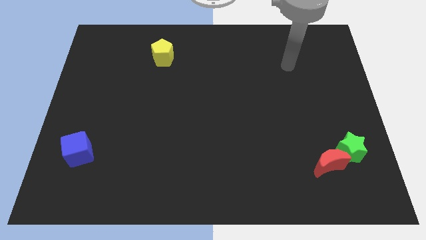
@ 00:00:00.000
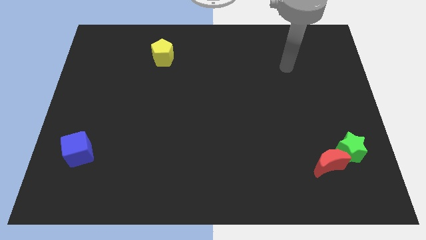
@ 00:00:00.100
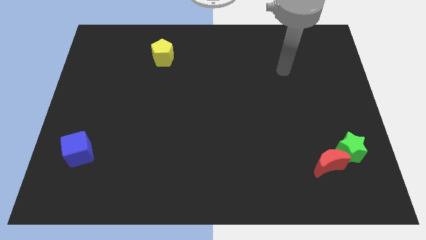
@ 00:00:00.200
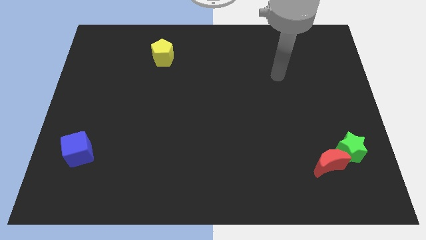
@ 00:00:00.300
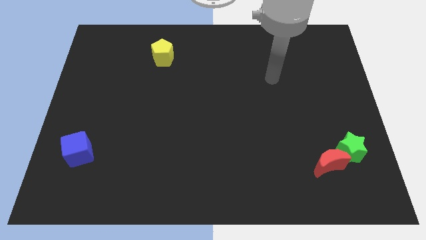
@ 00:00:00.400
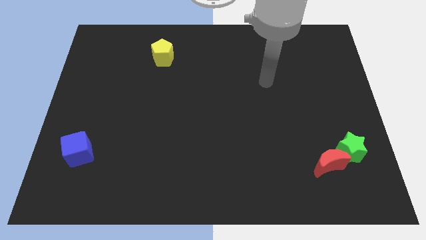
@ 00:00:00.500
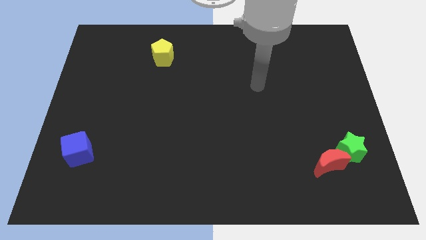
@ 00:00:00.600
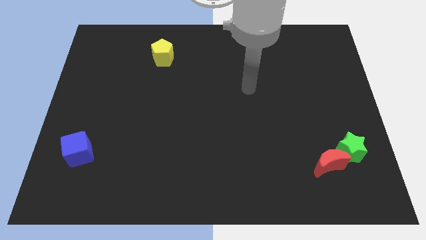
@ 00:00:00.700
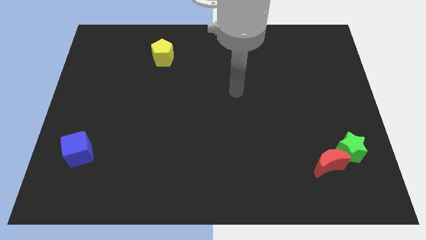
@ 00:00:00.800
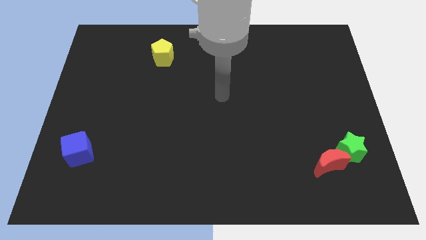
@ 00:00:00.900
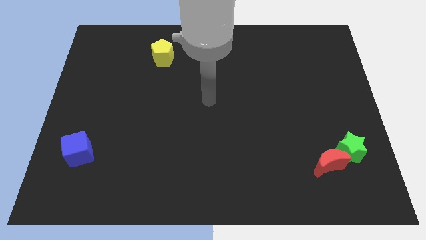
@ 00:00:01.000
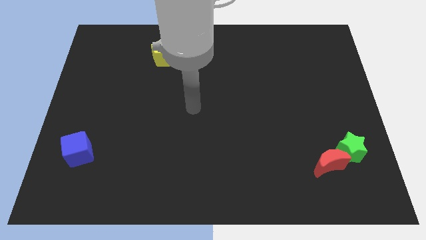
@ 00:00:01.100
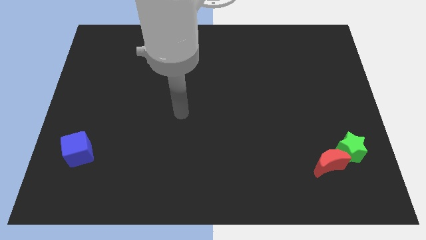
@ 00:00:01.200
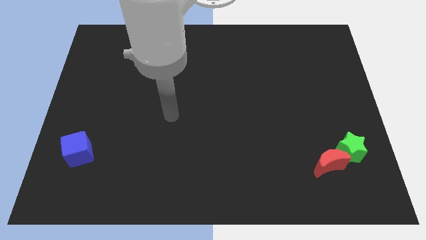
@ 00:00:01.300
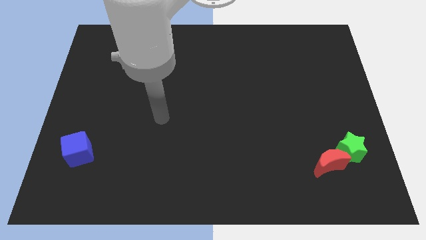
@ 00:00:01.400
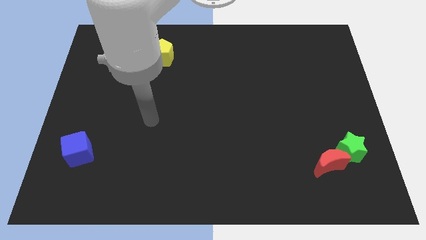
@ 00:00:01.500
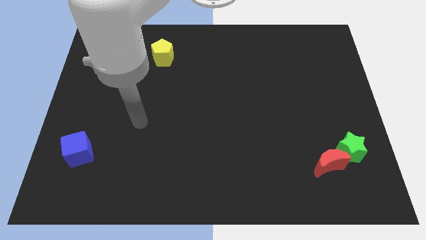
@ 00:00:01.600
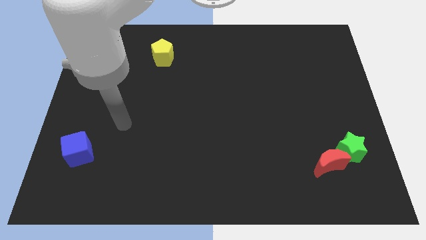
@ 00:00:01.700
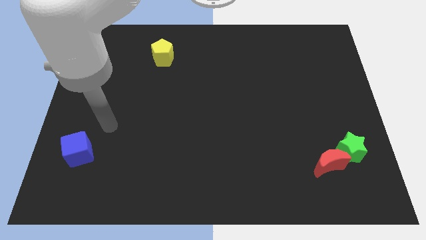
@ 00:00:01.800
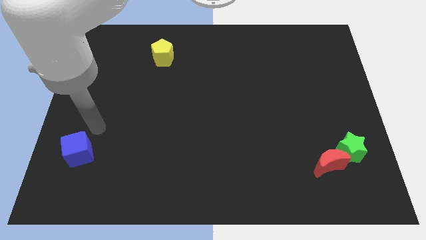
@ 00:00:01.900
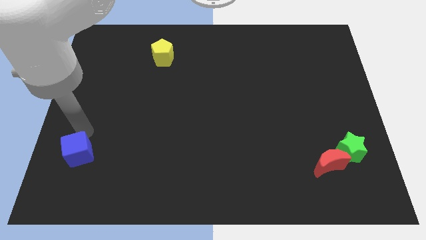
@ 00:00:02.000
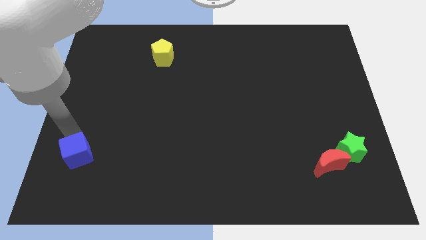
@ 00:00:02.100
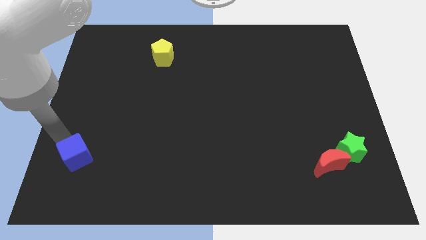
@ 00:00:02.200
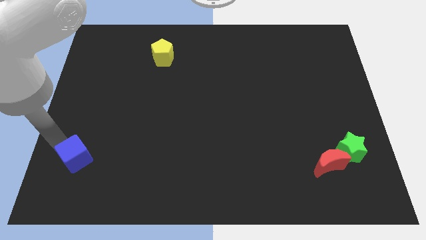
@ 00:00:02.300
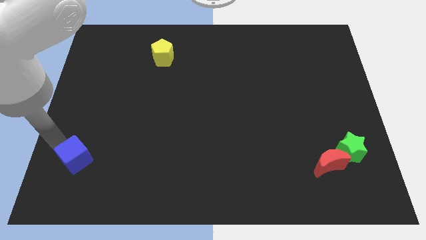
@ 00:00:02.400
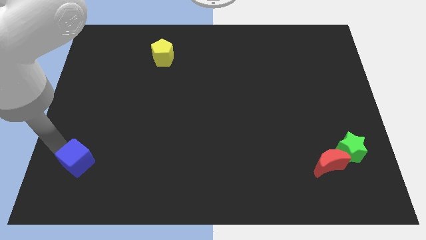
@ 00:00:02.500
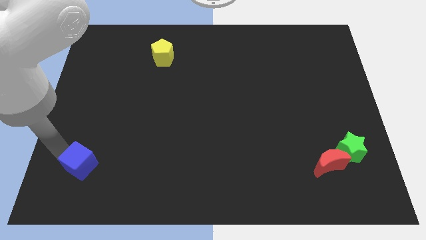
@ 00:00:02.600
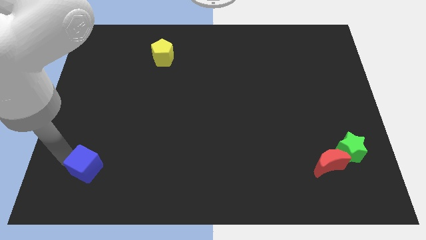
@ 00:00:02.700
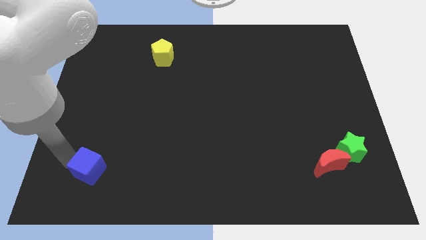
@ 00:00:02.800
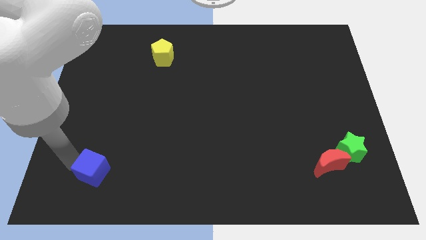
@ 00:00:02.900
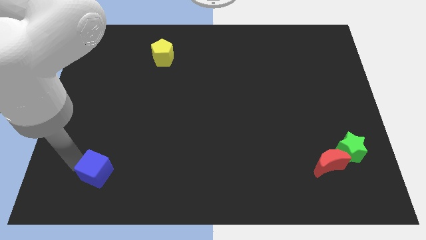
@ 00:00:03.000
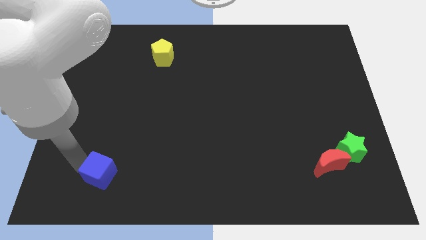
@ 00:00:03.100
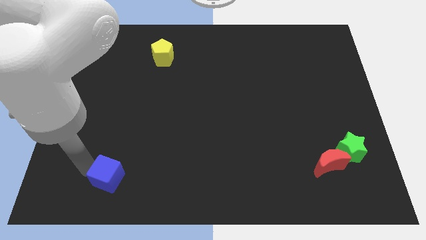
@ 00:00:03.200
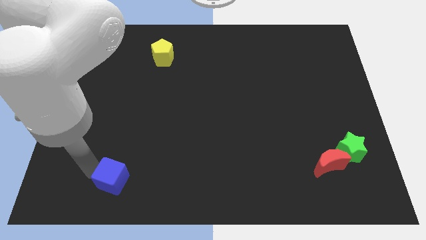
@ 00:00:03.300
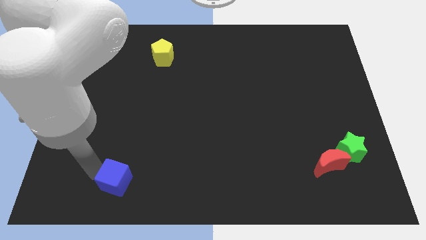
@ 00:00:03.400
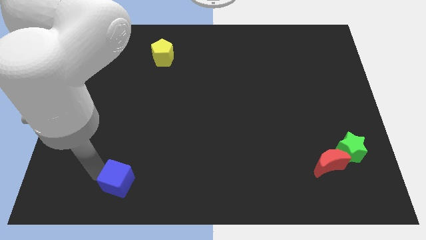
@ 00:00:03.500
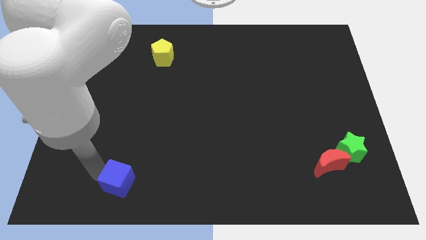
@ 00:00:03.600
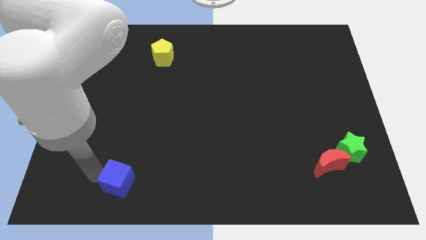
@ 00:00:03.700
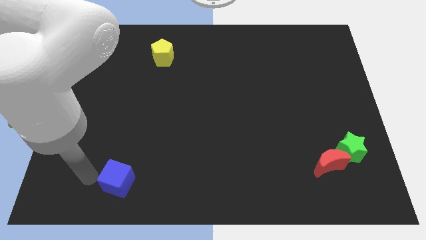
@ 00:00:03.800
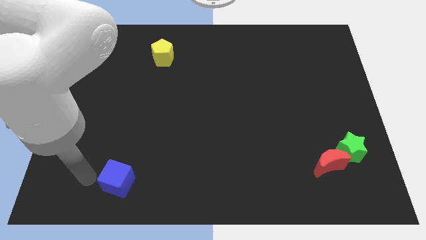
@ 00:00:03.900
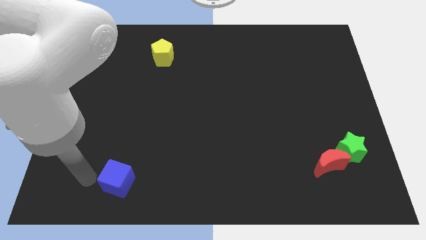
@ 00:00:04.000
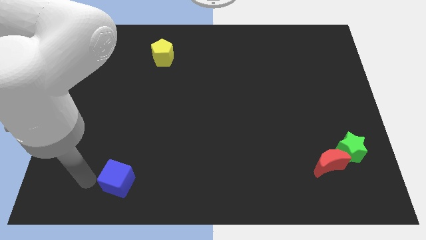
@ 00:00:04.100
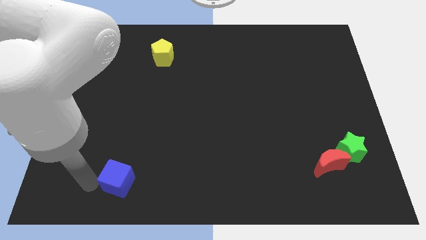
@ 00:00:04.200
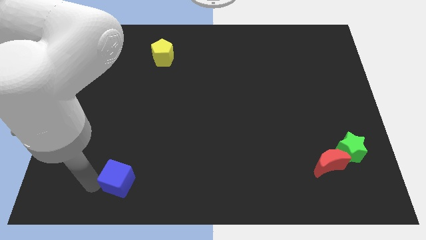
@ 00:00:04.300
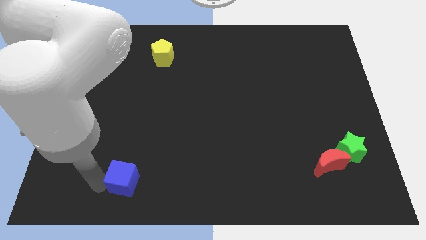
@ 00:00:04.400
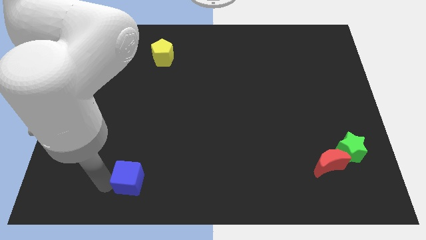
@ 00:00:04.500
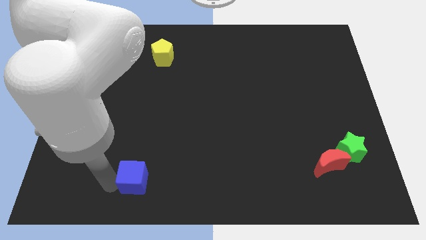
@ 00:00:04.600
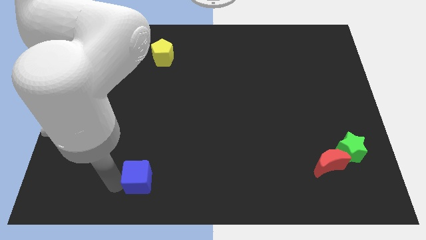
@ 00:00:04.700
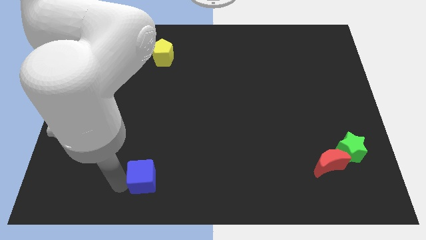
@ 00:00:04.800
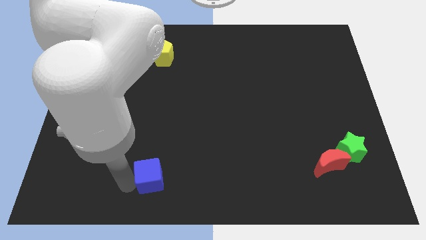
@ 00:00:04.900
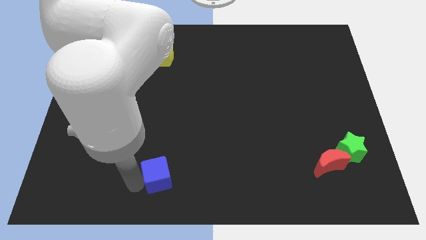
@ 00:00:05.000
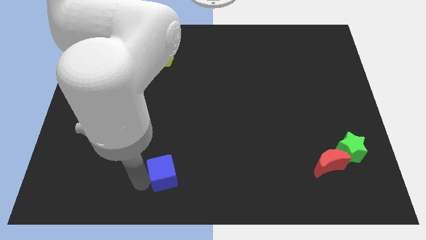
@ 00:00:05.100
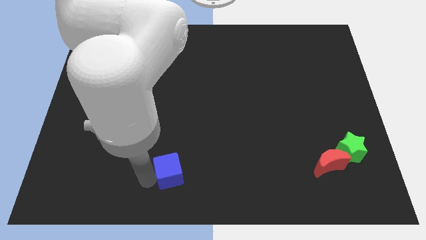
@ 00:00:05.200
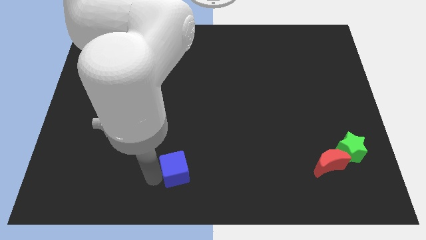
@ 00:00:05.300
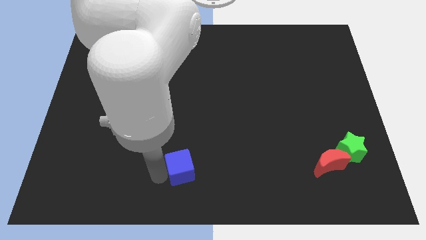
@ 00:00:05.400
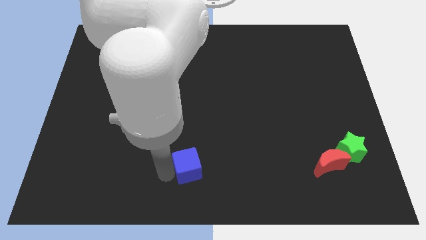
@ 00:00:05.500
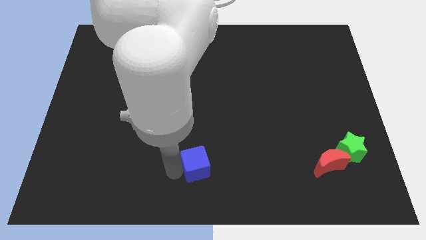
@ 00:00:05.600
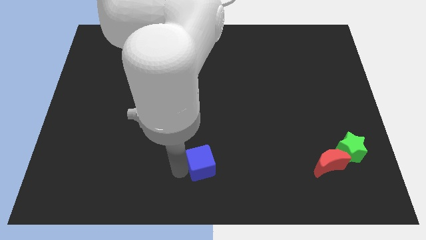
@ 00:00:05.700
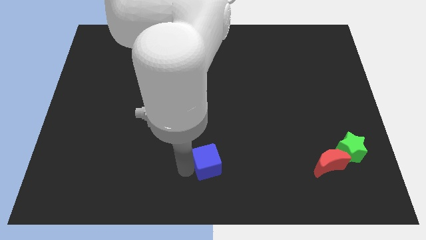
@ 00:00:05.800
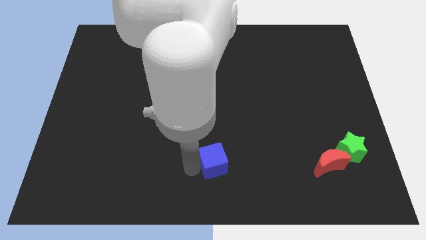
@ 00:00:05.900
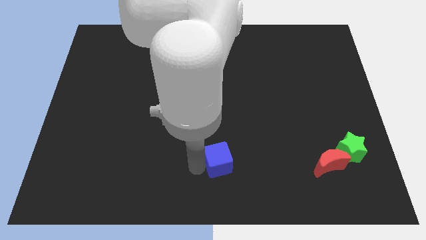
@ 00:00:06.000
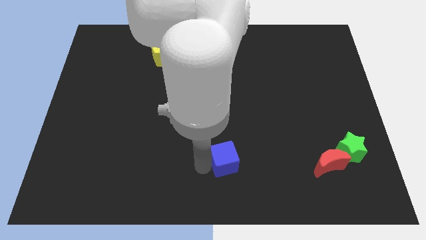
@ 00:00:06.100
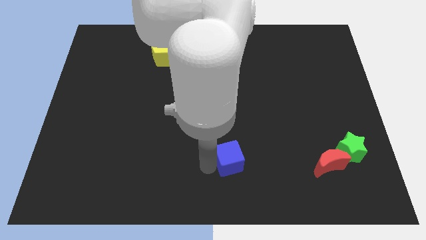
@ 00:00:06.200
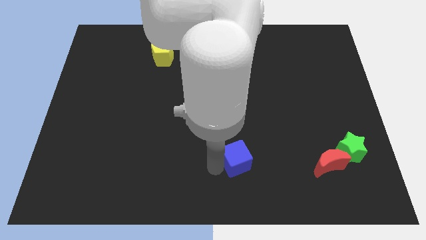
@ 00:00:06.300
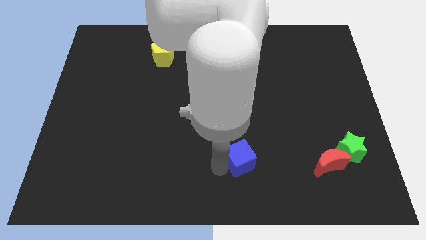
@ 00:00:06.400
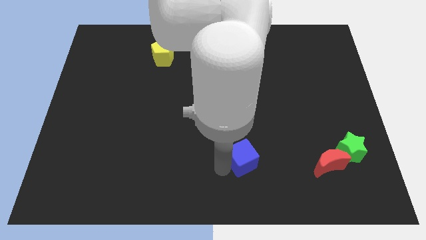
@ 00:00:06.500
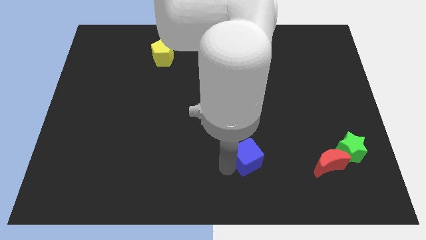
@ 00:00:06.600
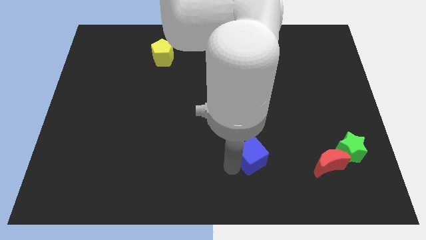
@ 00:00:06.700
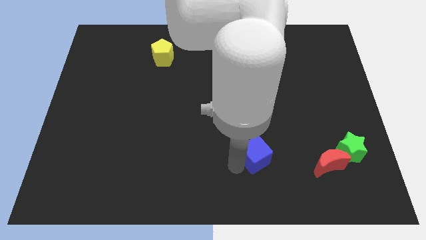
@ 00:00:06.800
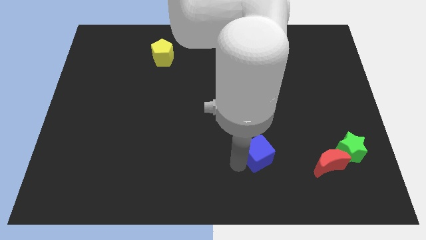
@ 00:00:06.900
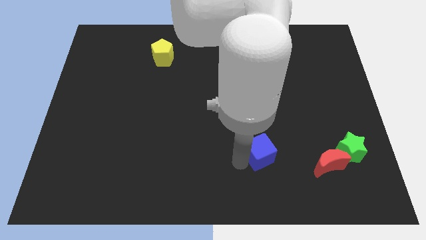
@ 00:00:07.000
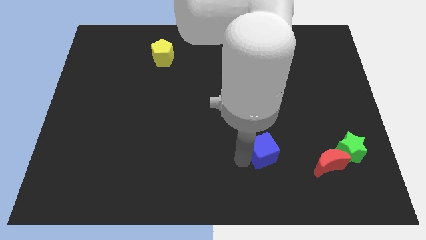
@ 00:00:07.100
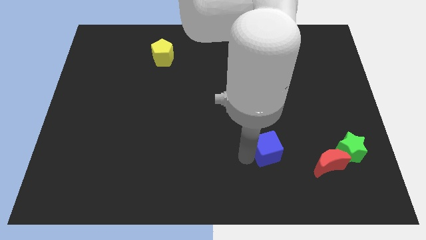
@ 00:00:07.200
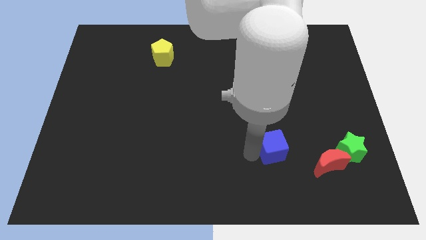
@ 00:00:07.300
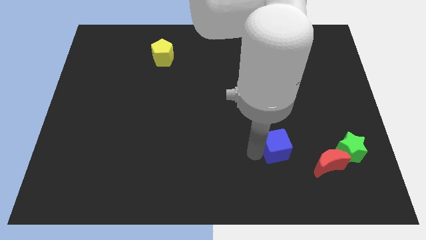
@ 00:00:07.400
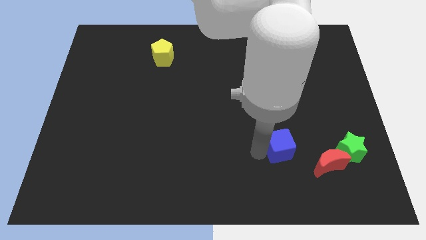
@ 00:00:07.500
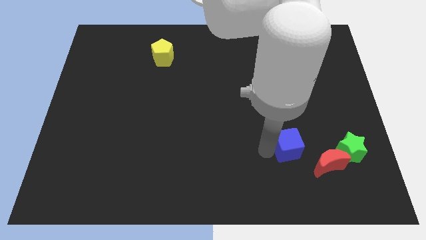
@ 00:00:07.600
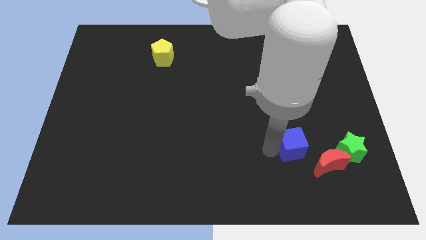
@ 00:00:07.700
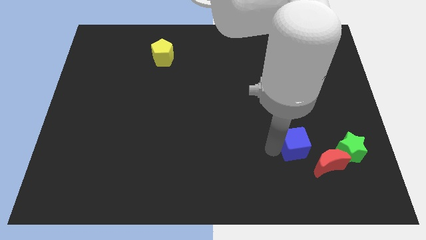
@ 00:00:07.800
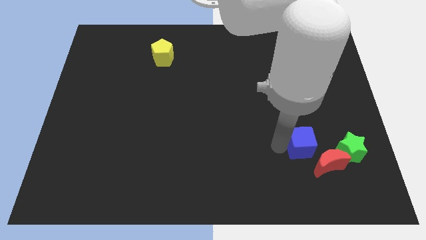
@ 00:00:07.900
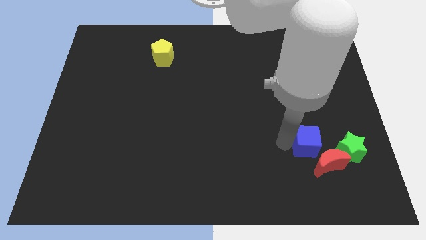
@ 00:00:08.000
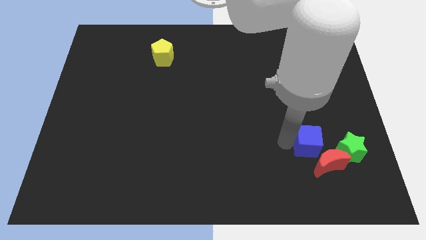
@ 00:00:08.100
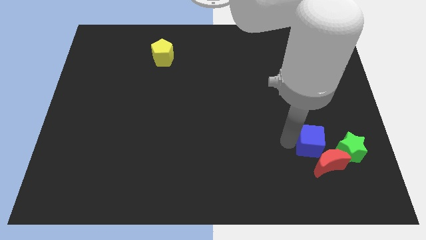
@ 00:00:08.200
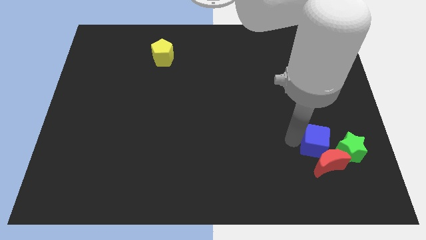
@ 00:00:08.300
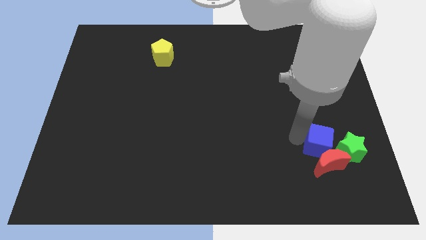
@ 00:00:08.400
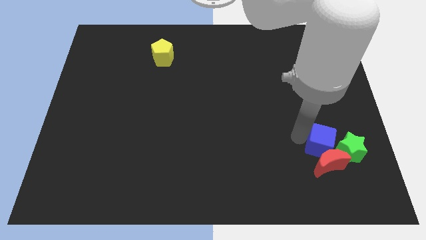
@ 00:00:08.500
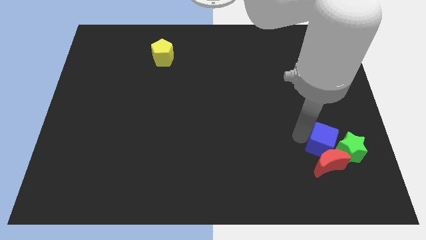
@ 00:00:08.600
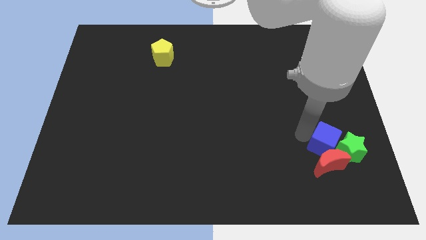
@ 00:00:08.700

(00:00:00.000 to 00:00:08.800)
move the cube towards the green block
